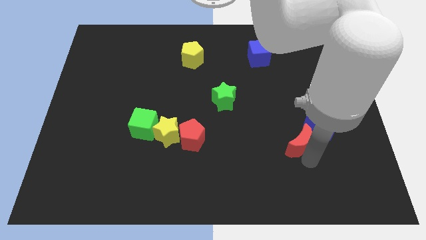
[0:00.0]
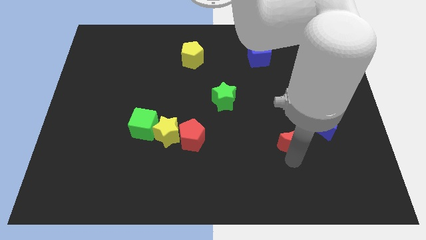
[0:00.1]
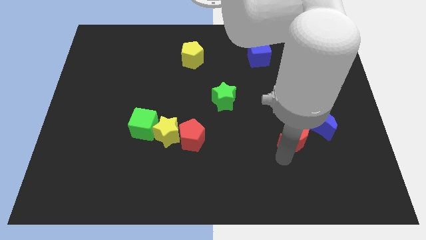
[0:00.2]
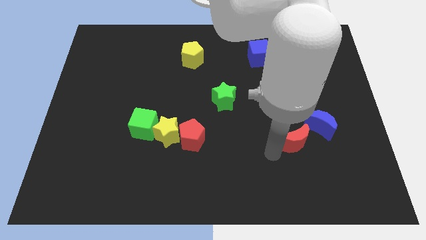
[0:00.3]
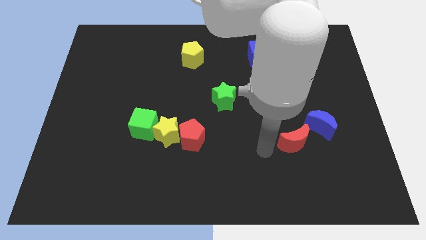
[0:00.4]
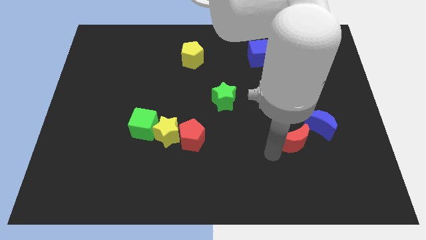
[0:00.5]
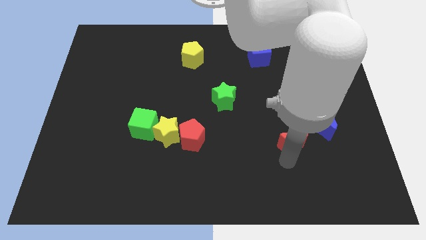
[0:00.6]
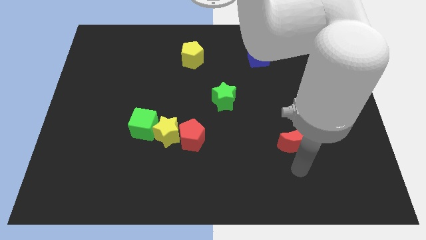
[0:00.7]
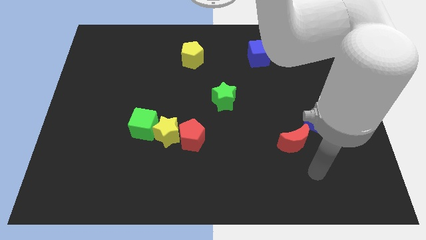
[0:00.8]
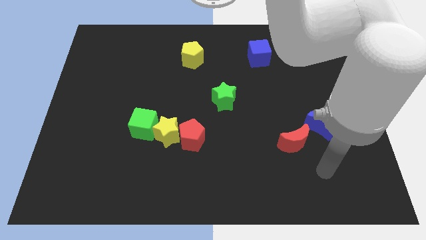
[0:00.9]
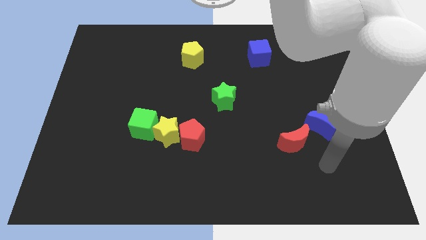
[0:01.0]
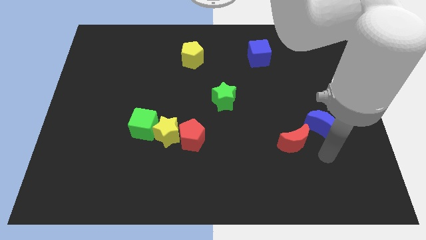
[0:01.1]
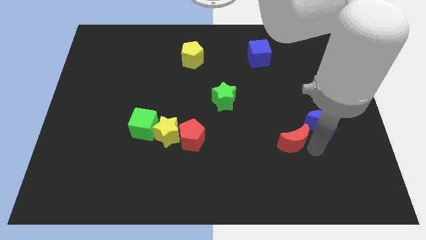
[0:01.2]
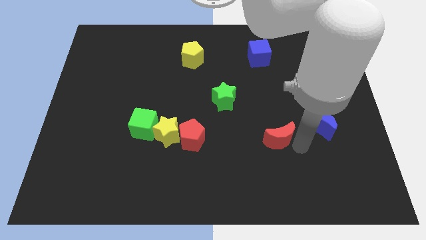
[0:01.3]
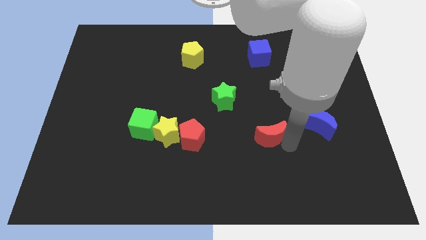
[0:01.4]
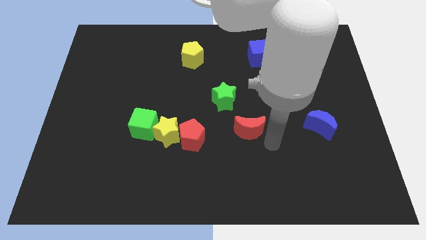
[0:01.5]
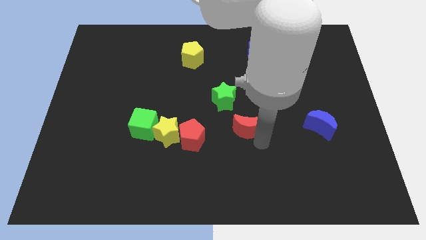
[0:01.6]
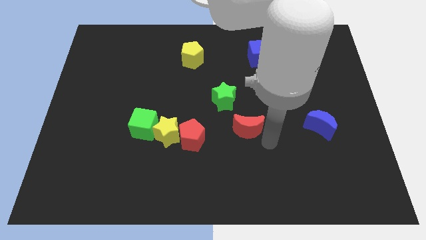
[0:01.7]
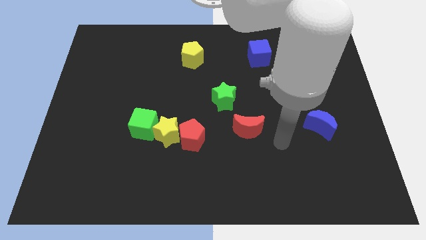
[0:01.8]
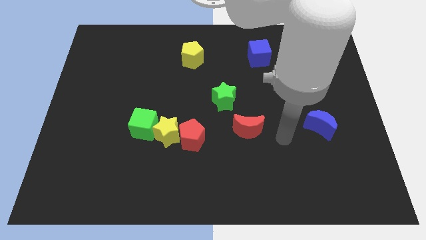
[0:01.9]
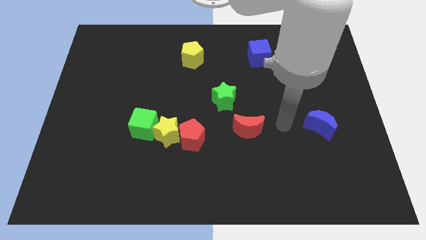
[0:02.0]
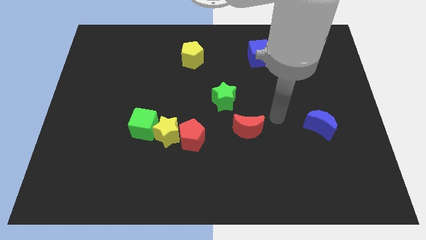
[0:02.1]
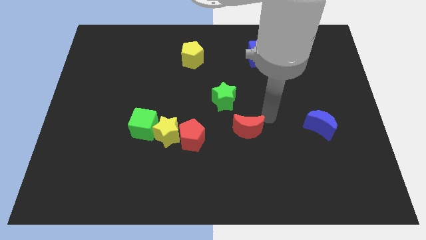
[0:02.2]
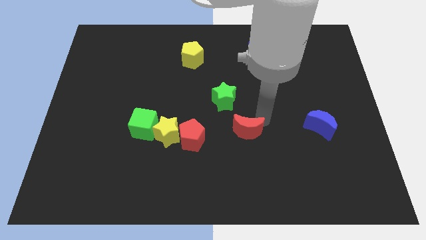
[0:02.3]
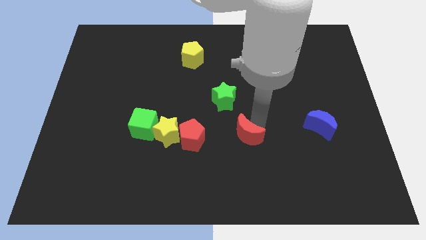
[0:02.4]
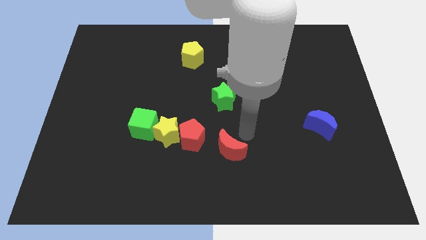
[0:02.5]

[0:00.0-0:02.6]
put the red crescent underneath green star

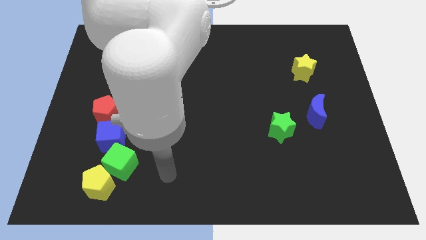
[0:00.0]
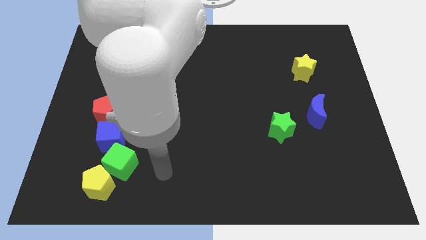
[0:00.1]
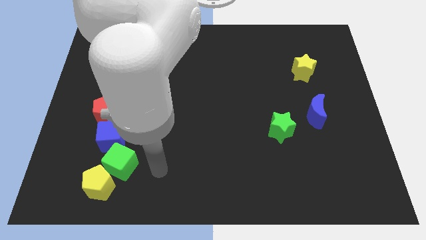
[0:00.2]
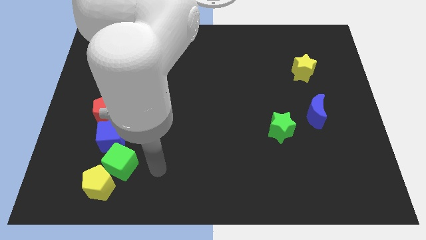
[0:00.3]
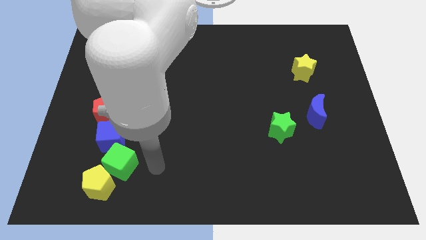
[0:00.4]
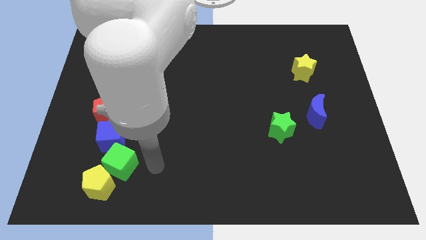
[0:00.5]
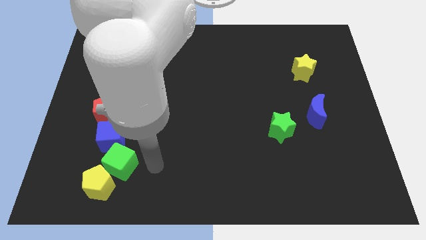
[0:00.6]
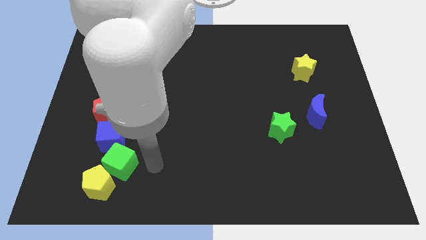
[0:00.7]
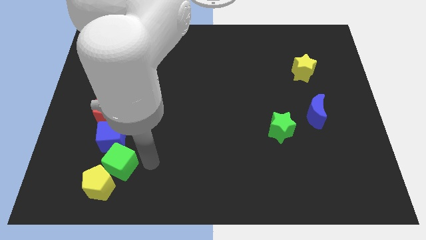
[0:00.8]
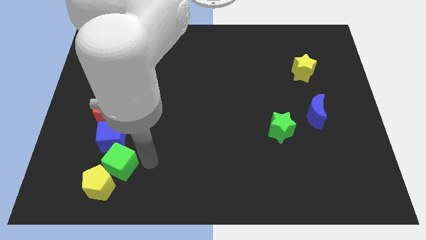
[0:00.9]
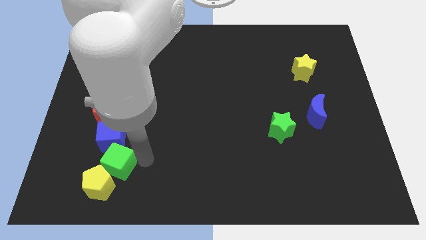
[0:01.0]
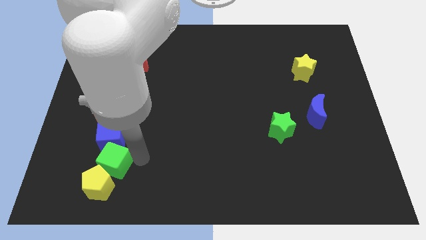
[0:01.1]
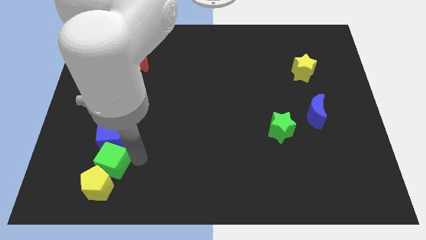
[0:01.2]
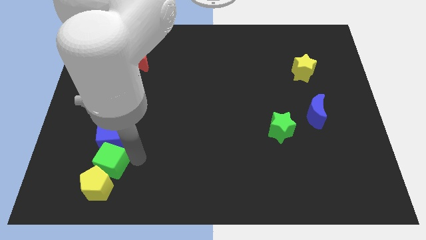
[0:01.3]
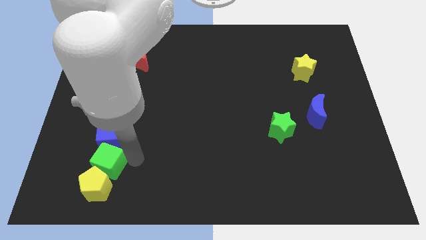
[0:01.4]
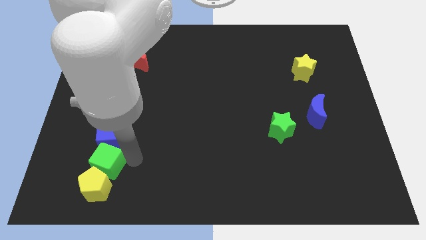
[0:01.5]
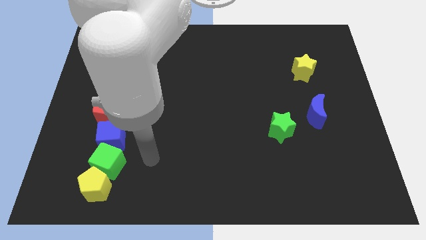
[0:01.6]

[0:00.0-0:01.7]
slide the green cube to the bottom side of the blue cube

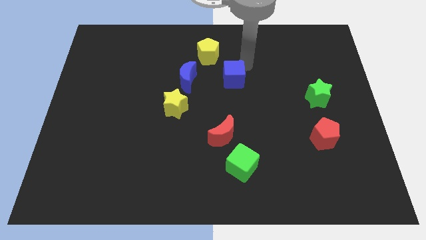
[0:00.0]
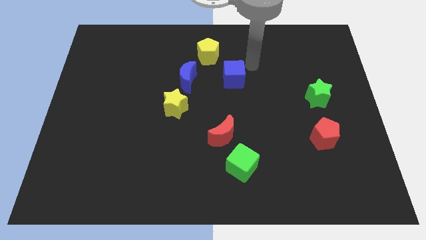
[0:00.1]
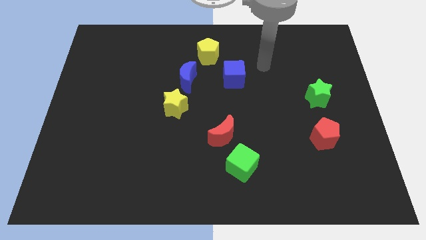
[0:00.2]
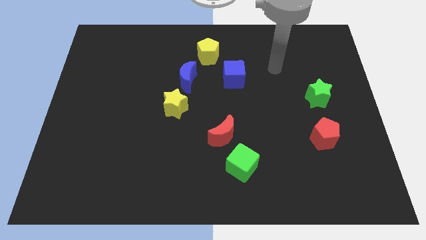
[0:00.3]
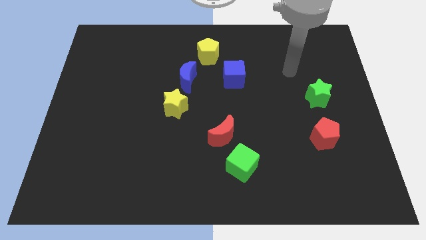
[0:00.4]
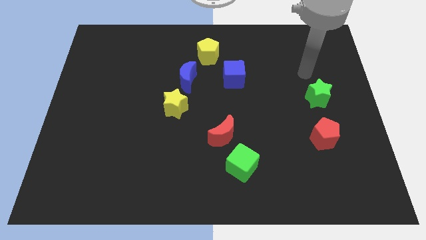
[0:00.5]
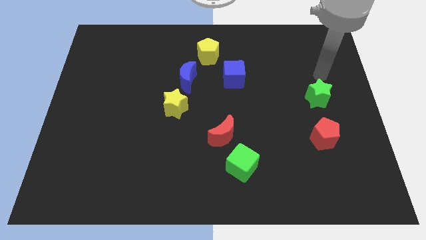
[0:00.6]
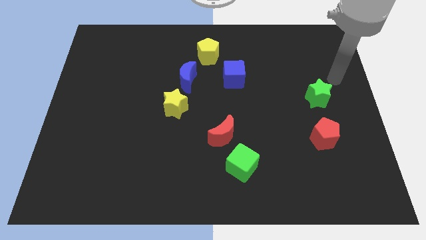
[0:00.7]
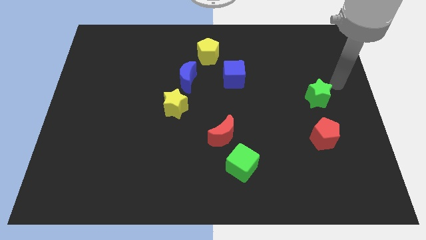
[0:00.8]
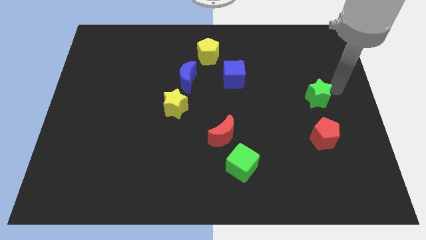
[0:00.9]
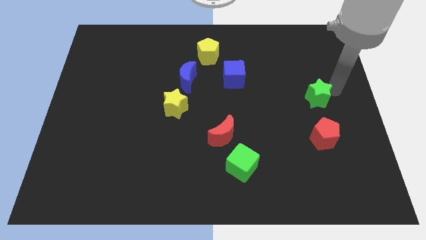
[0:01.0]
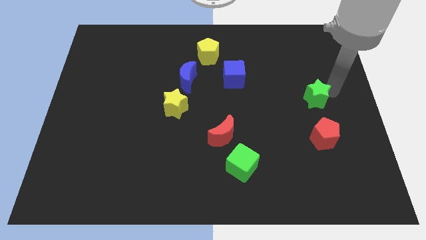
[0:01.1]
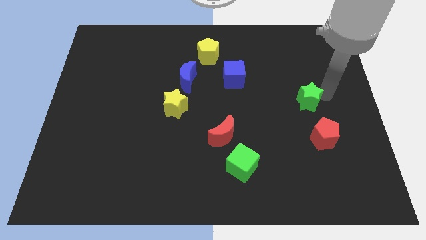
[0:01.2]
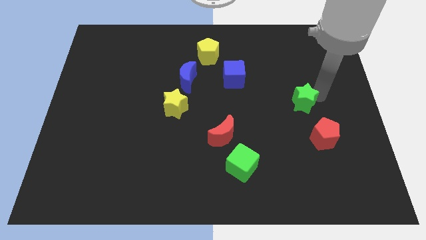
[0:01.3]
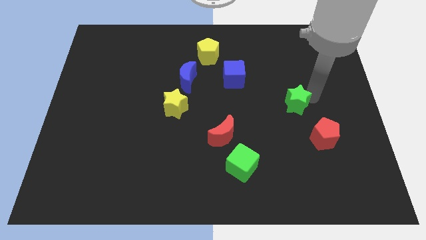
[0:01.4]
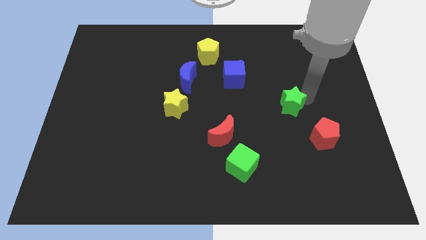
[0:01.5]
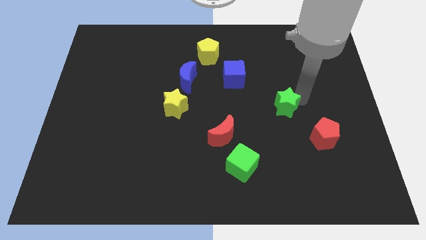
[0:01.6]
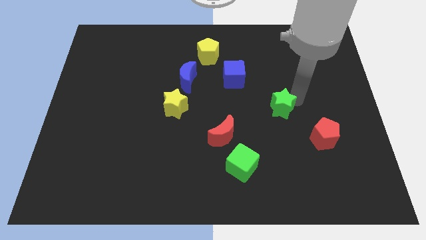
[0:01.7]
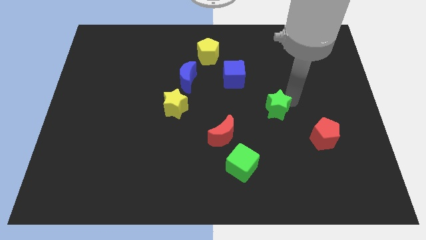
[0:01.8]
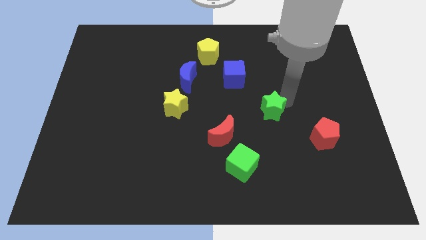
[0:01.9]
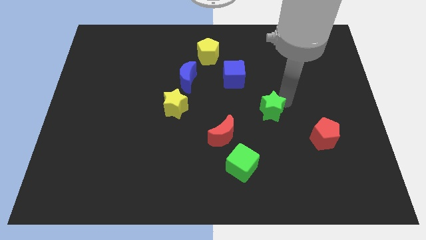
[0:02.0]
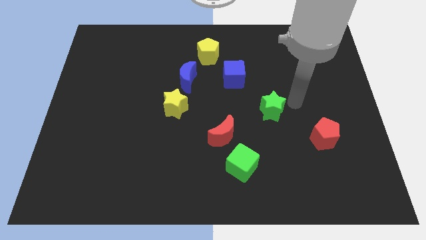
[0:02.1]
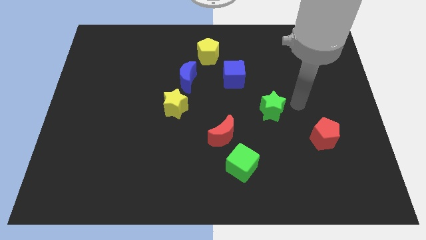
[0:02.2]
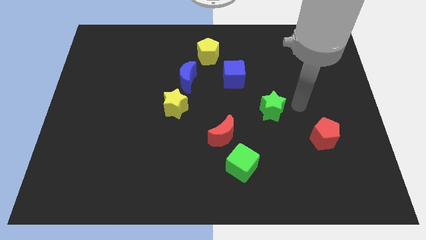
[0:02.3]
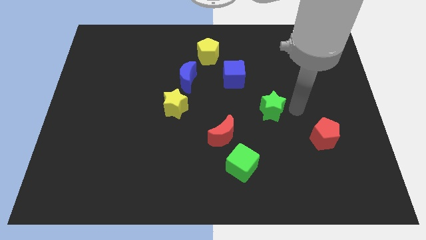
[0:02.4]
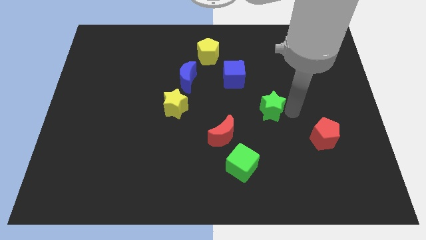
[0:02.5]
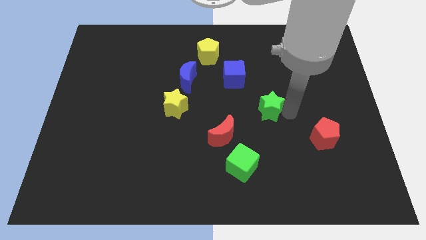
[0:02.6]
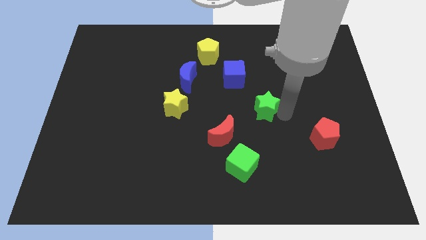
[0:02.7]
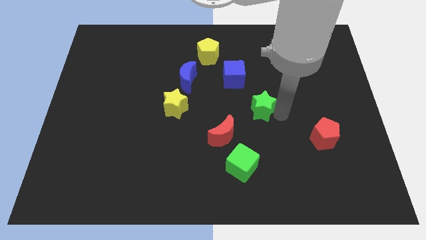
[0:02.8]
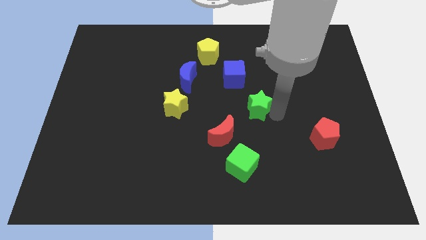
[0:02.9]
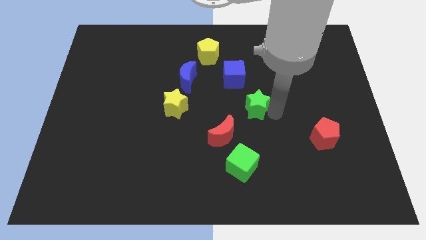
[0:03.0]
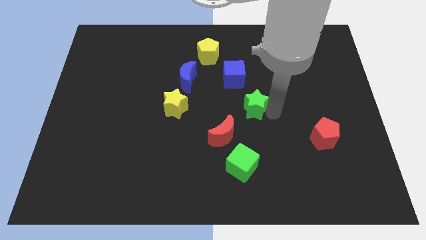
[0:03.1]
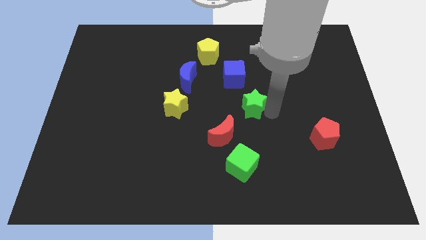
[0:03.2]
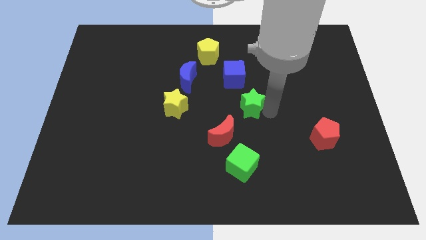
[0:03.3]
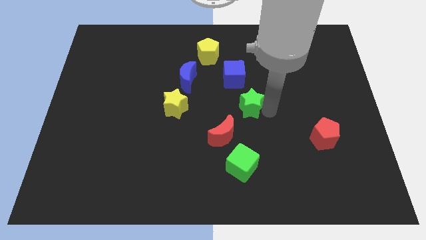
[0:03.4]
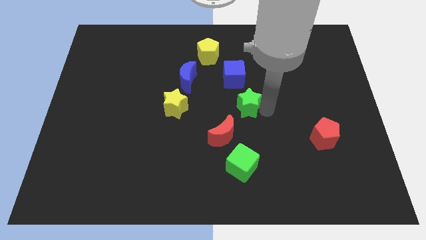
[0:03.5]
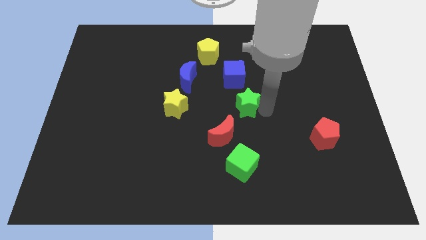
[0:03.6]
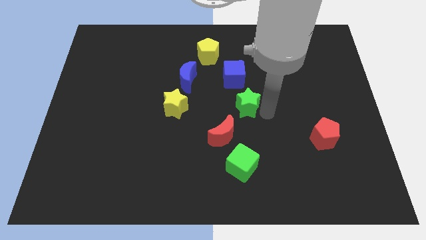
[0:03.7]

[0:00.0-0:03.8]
place the green star vertically above the green cube

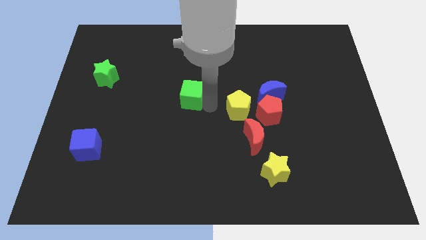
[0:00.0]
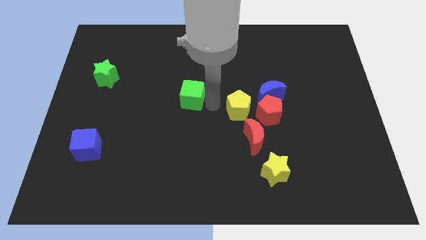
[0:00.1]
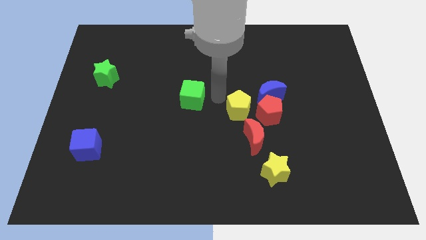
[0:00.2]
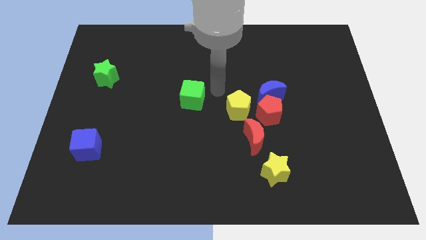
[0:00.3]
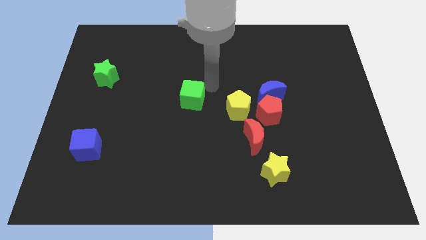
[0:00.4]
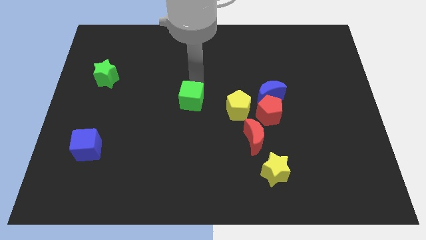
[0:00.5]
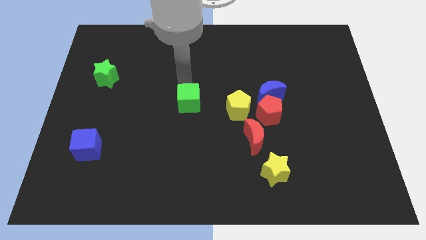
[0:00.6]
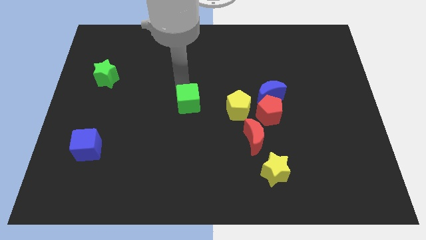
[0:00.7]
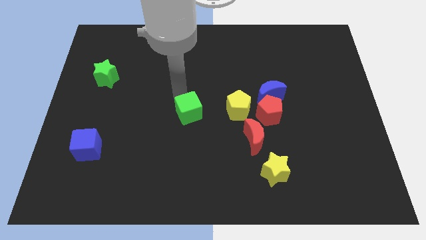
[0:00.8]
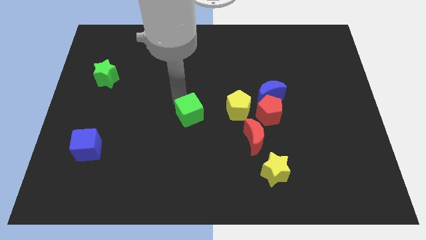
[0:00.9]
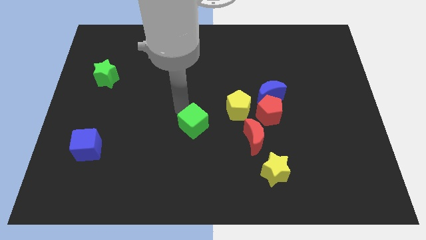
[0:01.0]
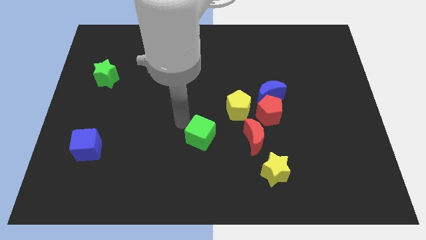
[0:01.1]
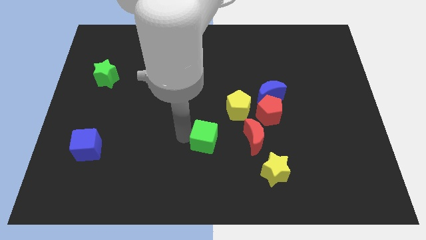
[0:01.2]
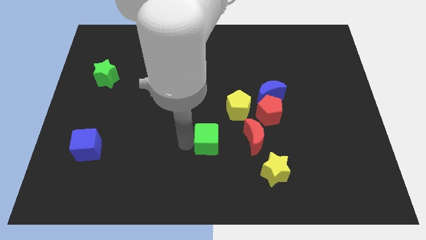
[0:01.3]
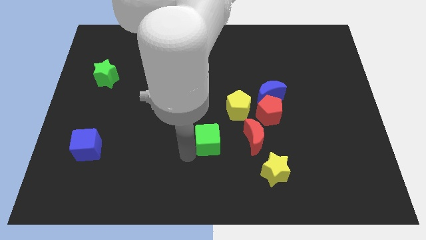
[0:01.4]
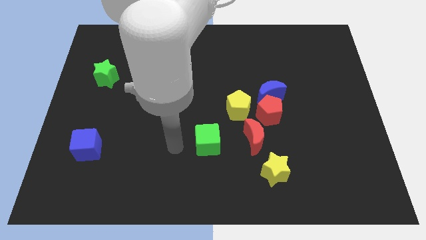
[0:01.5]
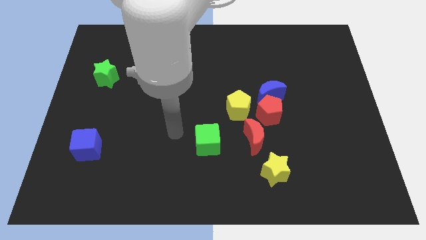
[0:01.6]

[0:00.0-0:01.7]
push the green cube to the left side of the red crescent
